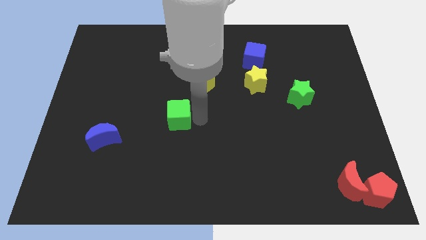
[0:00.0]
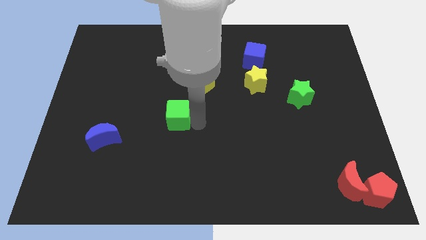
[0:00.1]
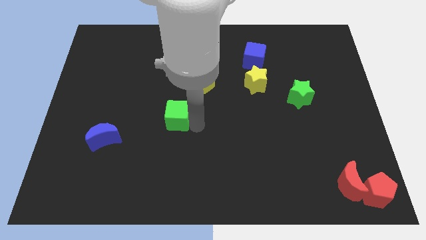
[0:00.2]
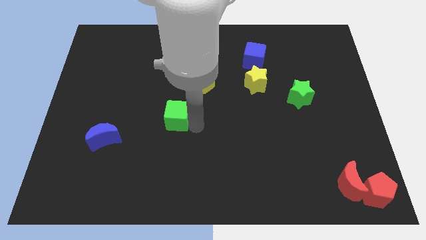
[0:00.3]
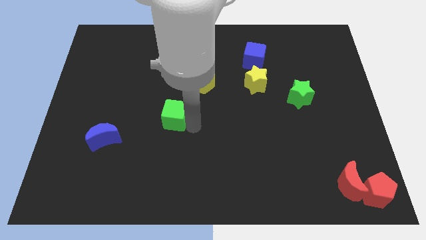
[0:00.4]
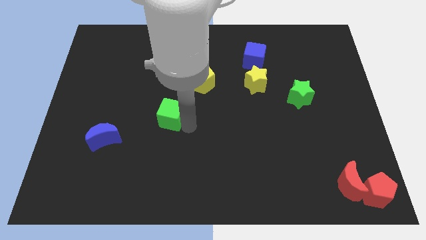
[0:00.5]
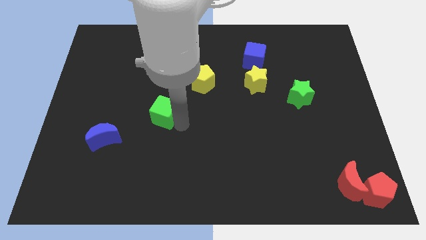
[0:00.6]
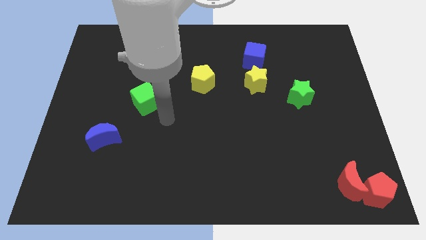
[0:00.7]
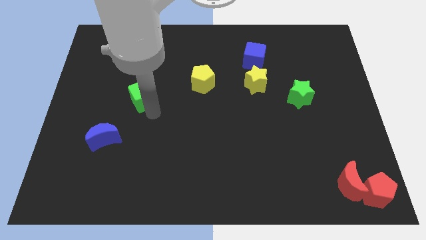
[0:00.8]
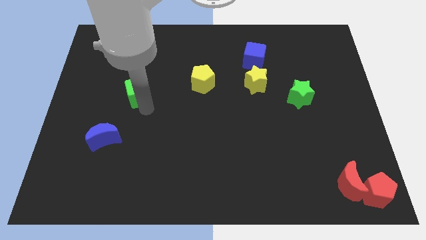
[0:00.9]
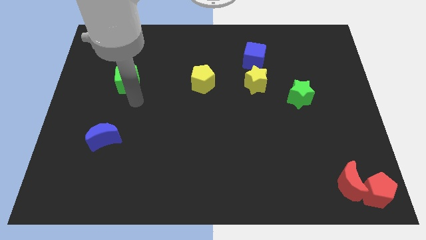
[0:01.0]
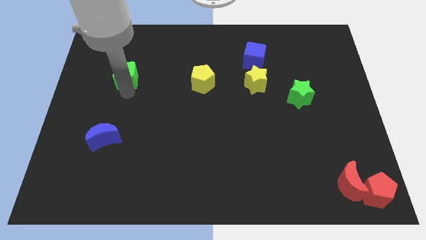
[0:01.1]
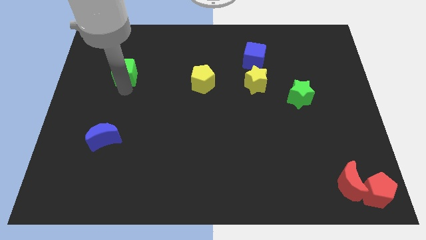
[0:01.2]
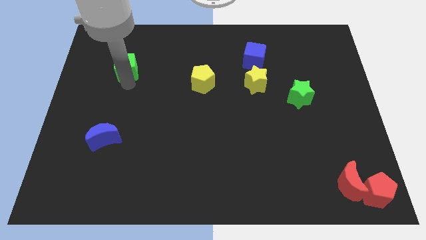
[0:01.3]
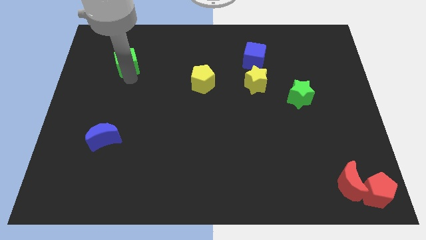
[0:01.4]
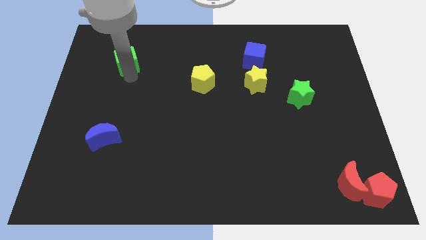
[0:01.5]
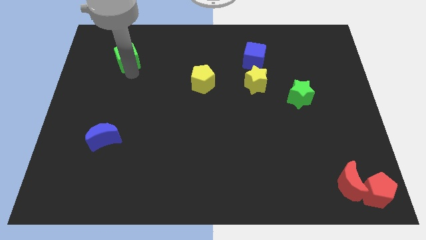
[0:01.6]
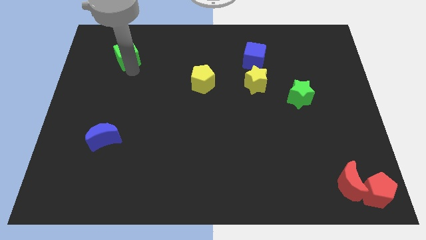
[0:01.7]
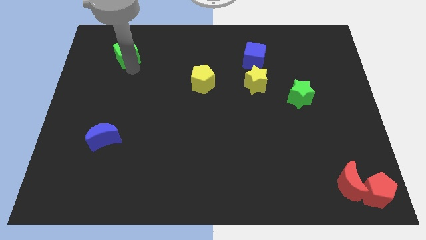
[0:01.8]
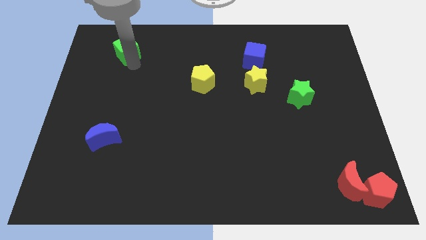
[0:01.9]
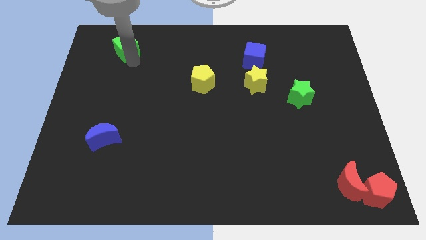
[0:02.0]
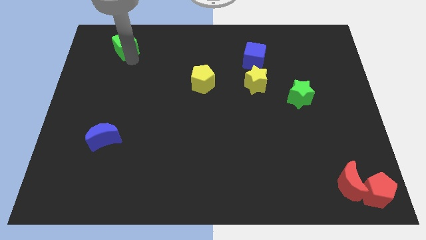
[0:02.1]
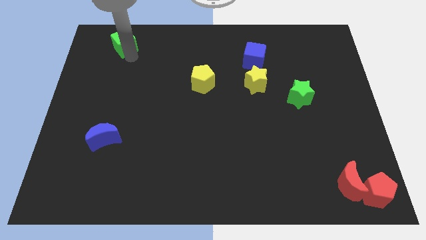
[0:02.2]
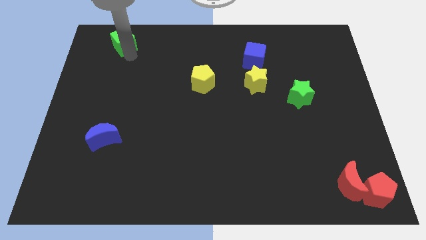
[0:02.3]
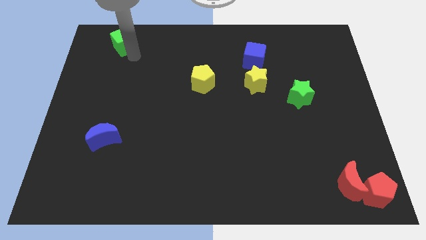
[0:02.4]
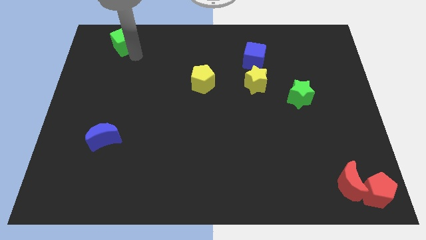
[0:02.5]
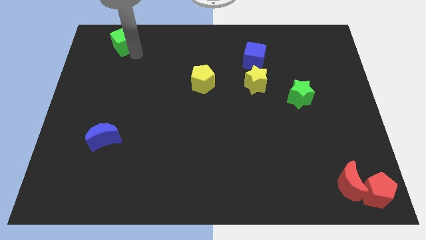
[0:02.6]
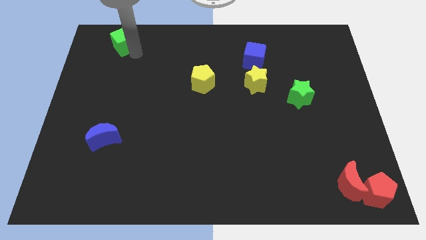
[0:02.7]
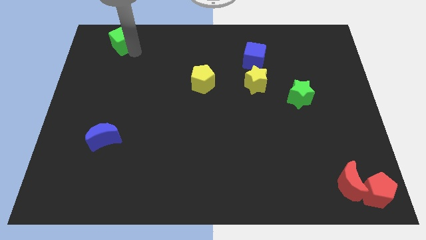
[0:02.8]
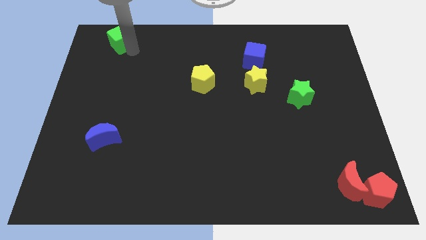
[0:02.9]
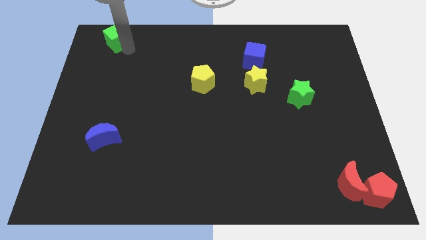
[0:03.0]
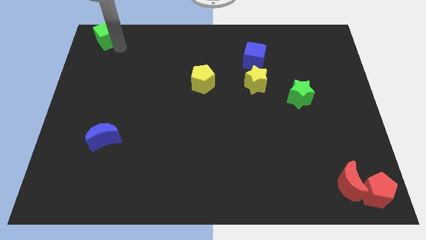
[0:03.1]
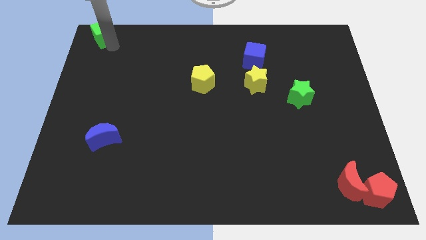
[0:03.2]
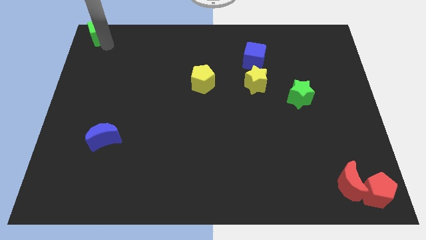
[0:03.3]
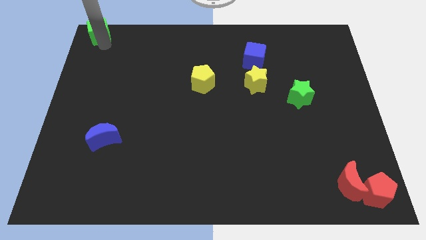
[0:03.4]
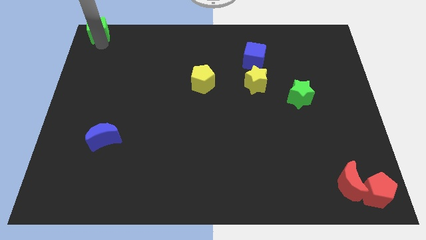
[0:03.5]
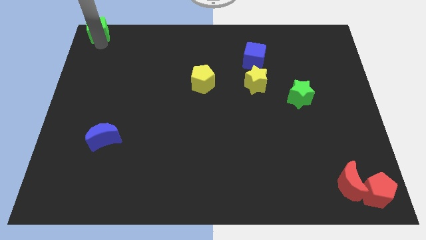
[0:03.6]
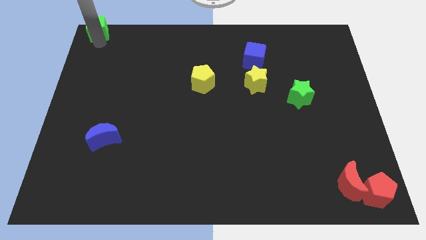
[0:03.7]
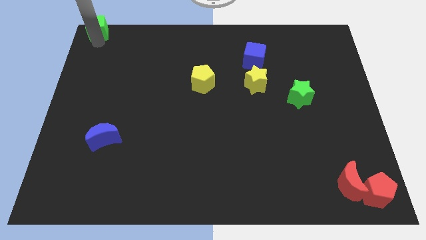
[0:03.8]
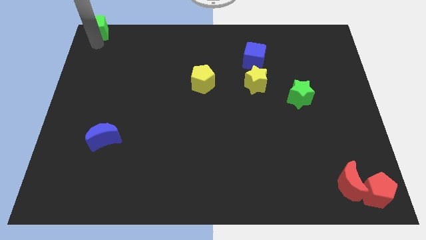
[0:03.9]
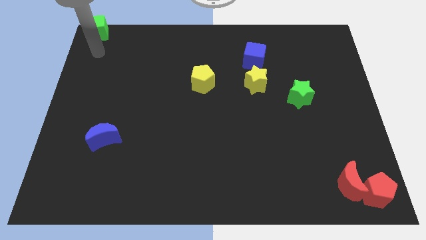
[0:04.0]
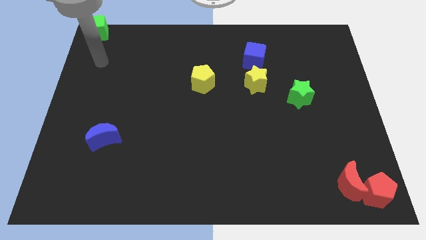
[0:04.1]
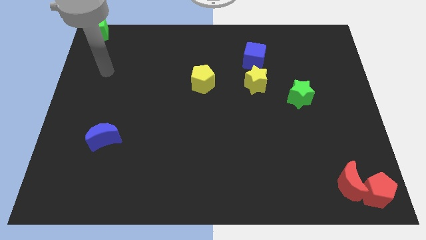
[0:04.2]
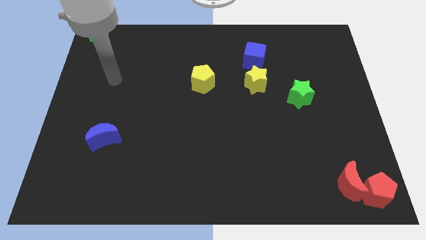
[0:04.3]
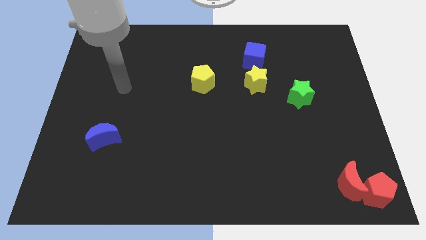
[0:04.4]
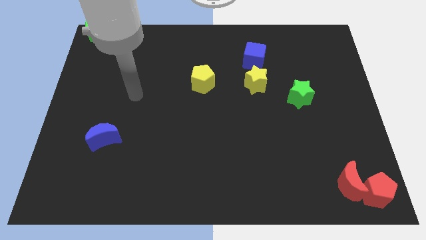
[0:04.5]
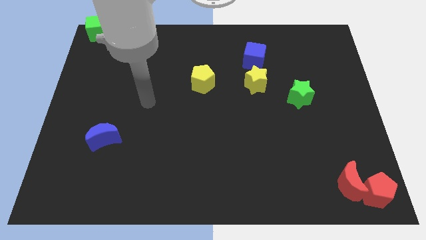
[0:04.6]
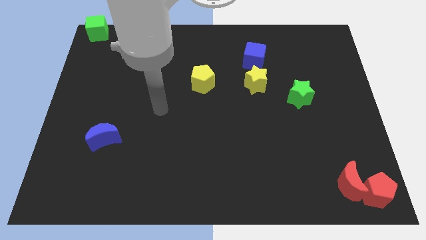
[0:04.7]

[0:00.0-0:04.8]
move the green cube to the top left corner of the board

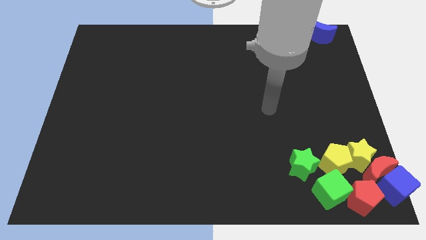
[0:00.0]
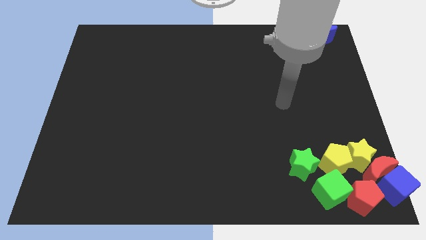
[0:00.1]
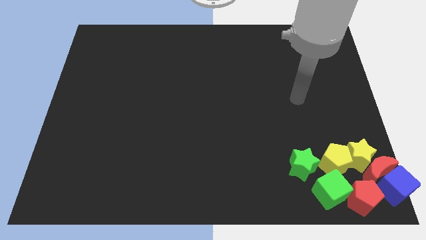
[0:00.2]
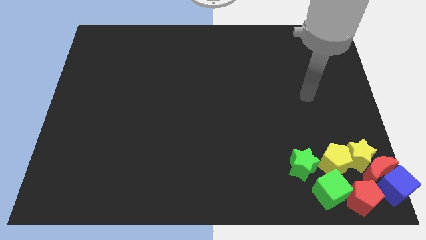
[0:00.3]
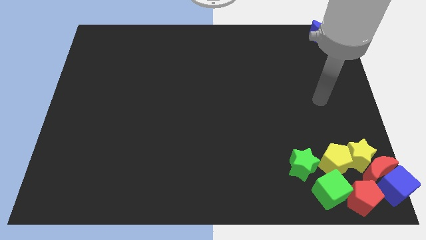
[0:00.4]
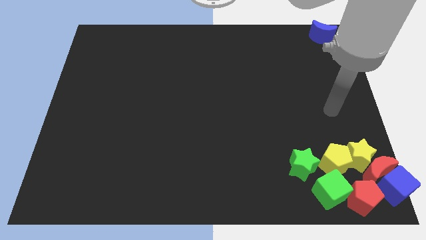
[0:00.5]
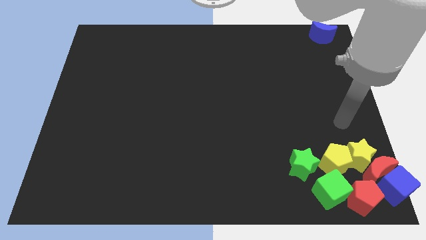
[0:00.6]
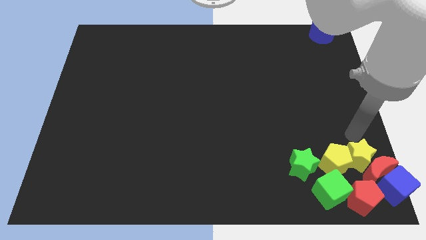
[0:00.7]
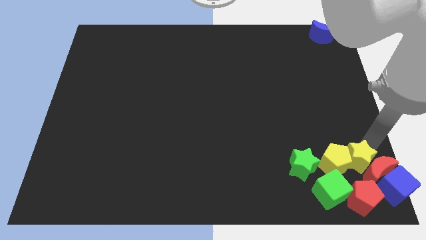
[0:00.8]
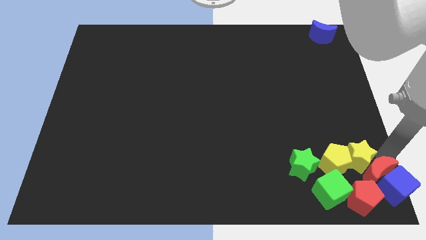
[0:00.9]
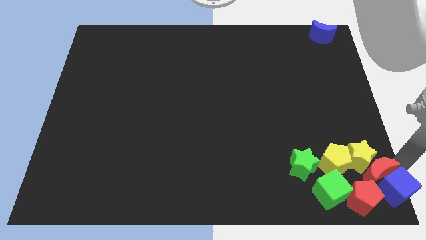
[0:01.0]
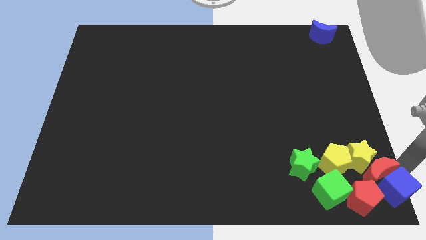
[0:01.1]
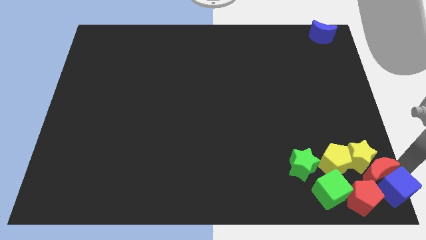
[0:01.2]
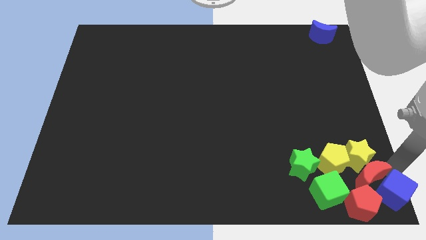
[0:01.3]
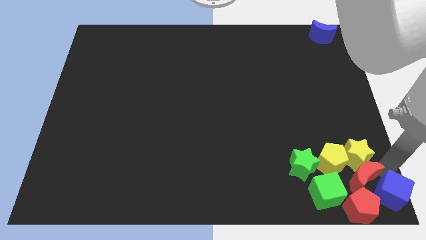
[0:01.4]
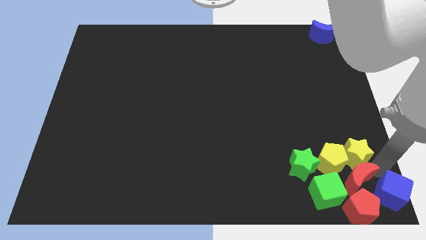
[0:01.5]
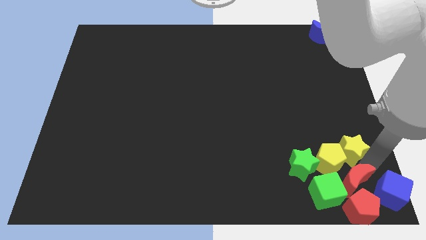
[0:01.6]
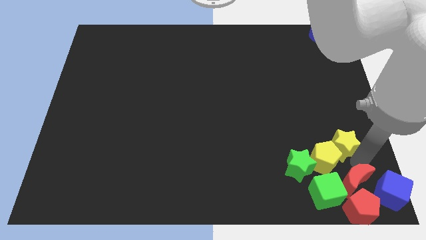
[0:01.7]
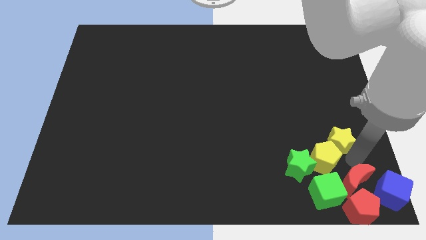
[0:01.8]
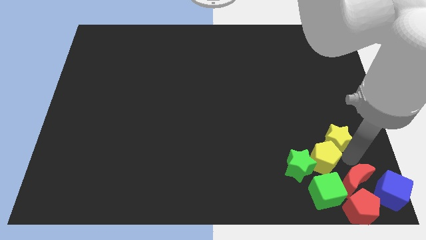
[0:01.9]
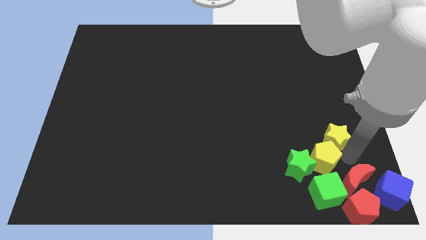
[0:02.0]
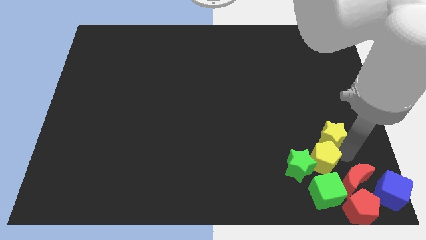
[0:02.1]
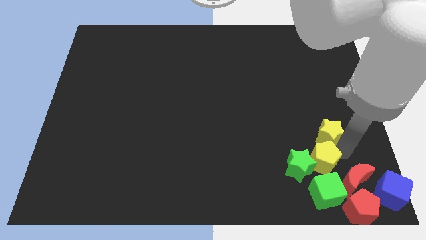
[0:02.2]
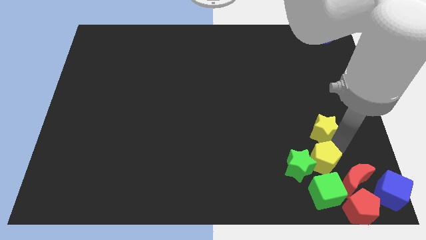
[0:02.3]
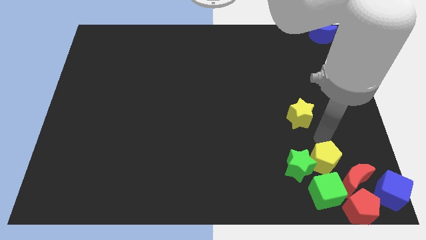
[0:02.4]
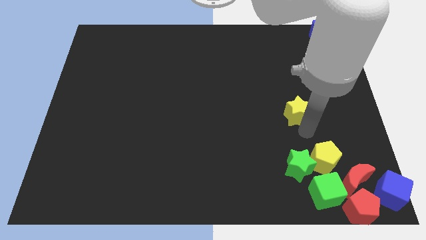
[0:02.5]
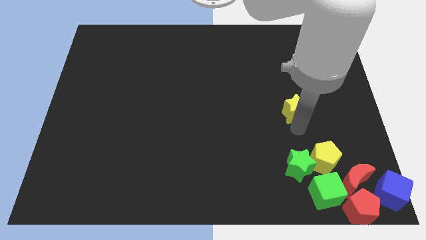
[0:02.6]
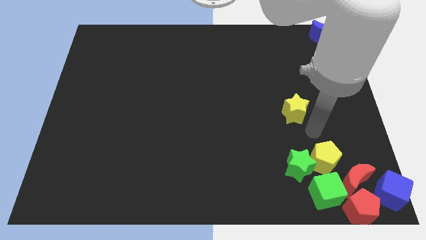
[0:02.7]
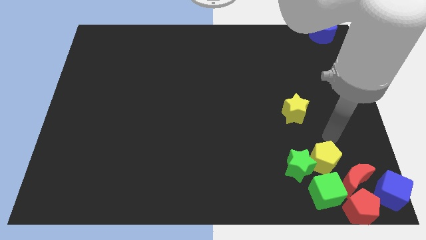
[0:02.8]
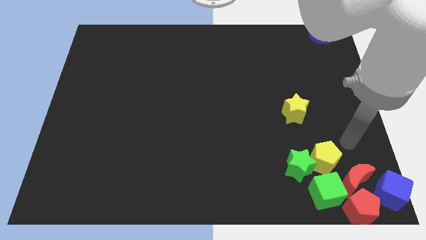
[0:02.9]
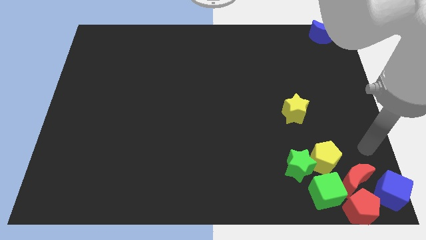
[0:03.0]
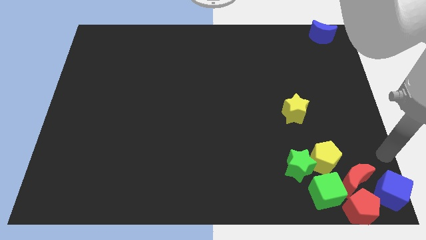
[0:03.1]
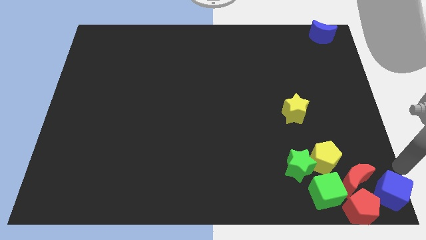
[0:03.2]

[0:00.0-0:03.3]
separate the yellow star from the group of blocks

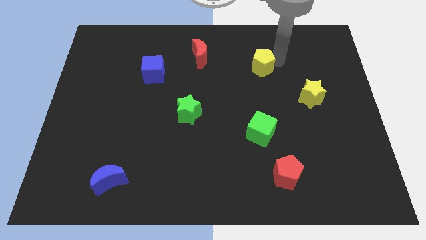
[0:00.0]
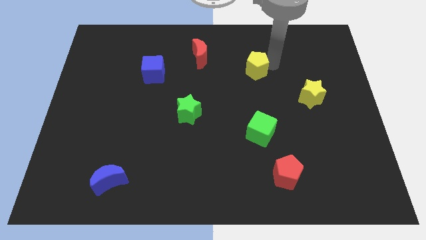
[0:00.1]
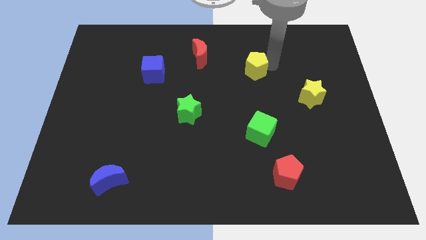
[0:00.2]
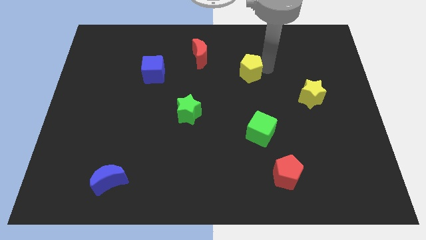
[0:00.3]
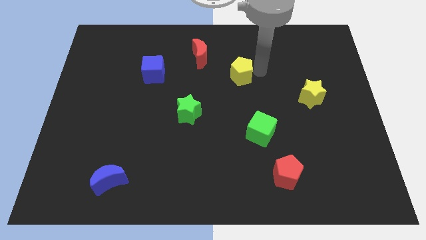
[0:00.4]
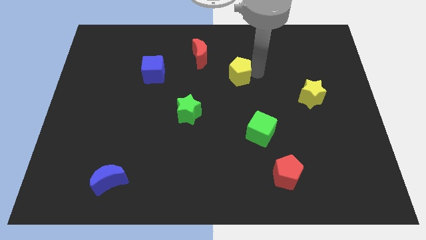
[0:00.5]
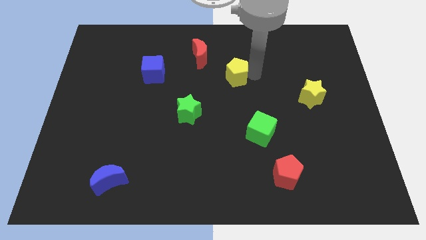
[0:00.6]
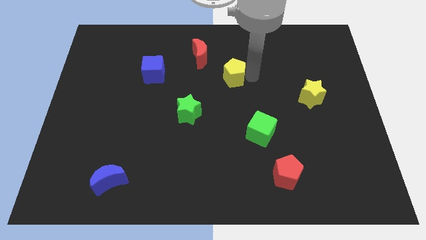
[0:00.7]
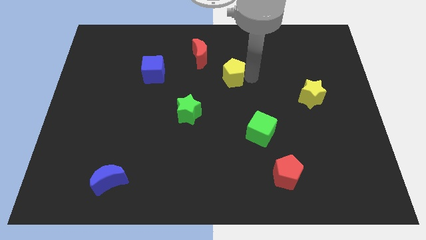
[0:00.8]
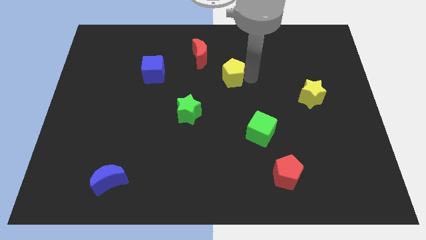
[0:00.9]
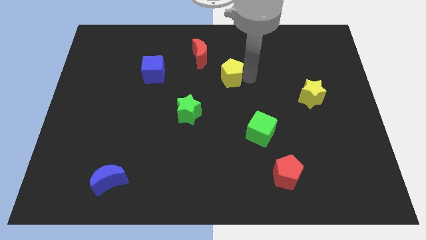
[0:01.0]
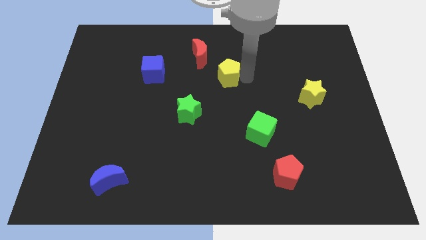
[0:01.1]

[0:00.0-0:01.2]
slide yellow pentagon to the right of blue cube
